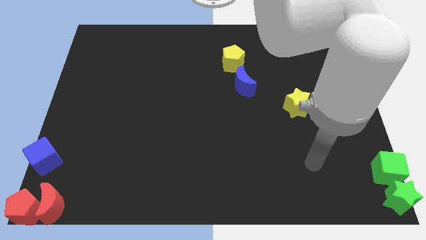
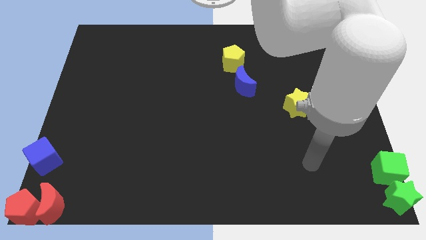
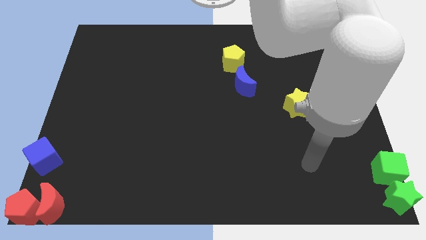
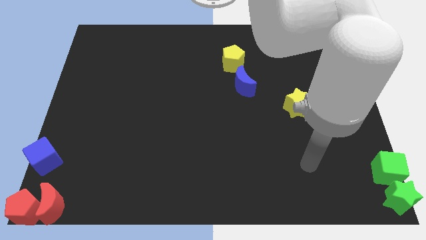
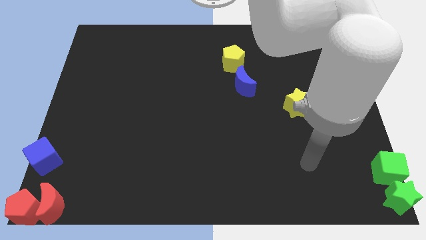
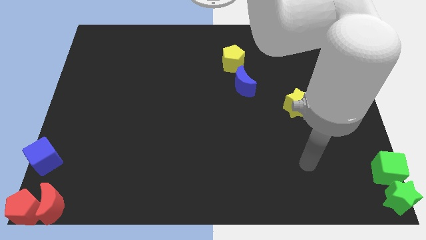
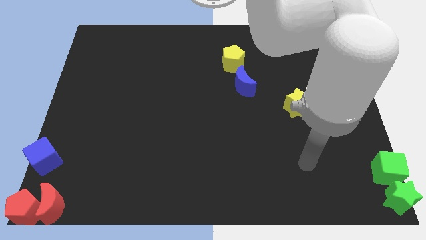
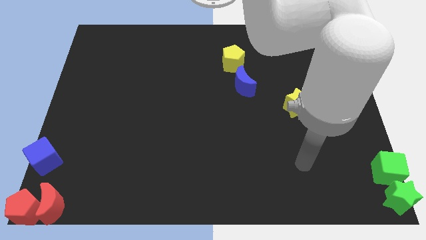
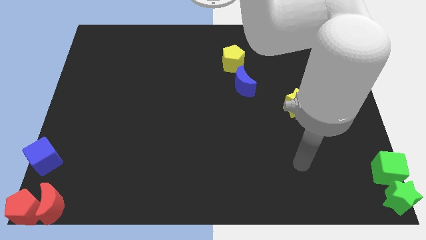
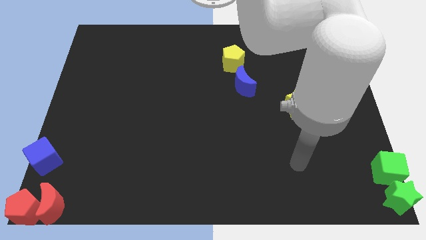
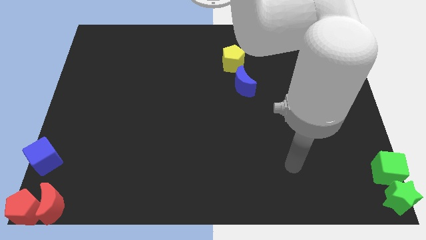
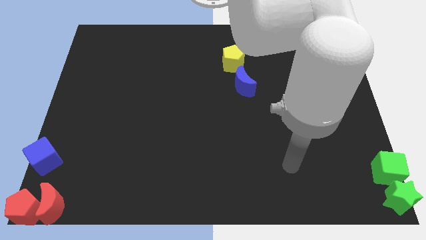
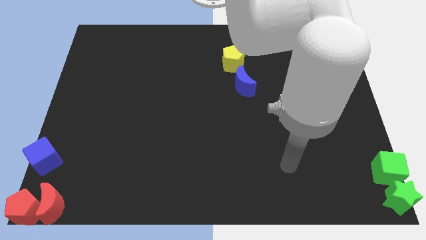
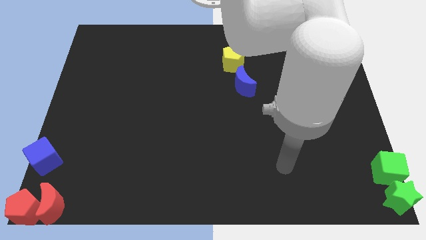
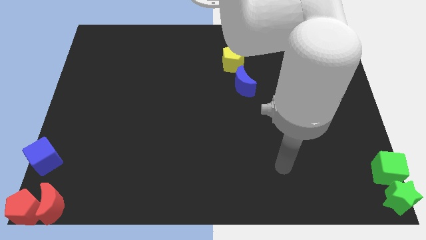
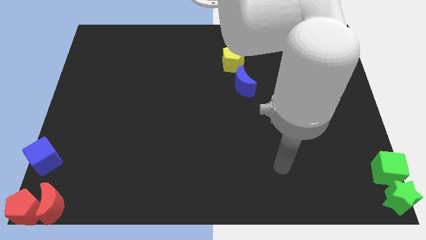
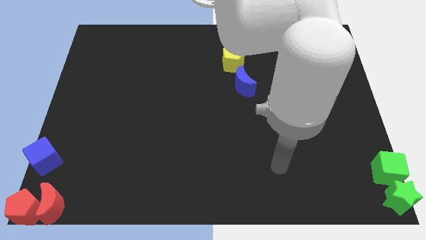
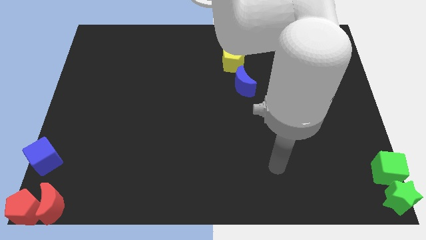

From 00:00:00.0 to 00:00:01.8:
move the arm towards the left side

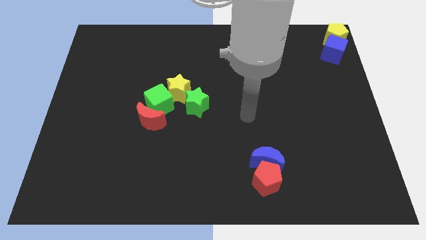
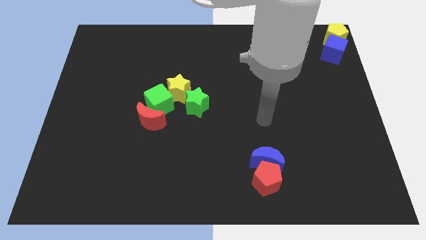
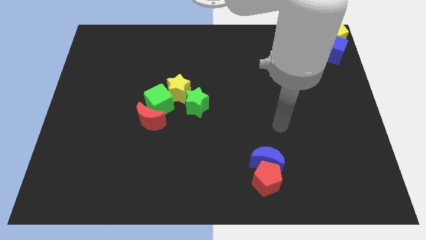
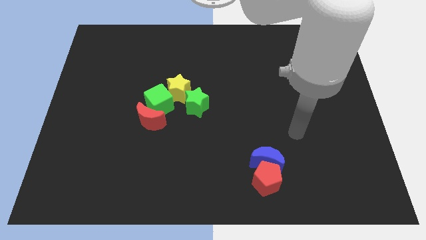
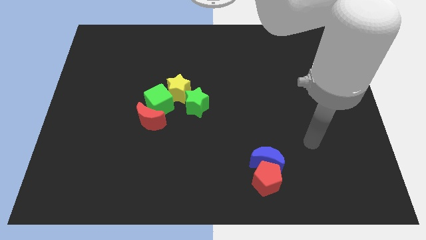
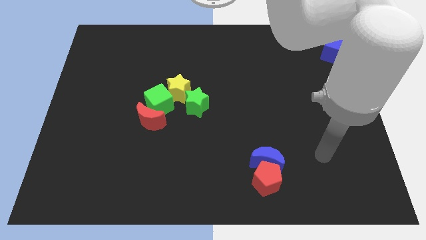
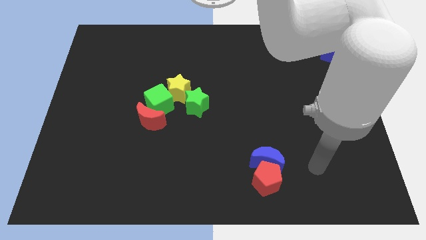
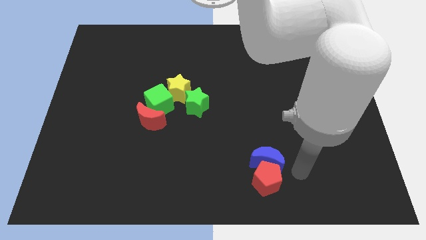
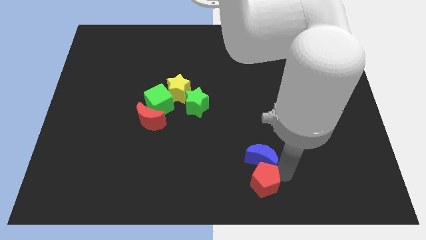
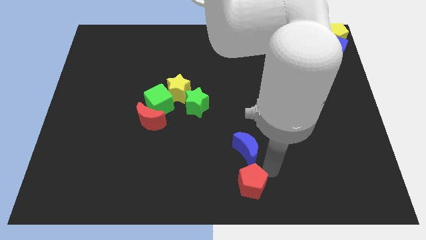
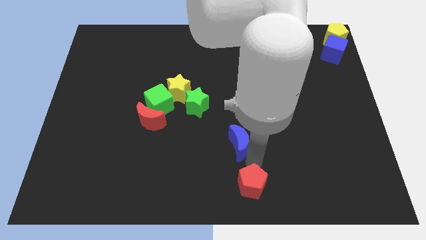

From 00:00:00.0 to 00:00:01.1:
move arm towards the blue crescent on the bottom right of the board

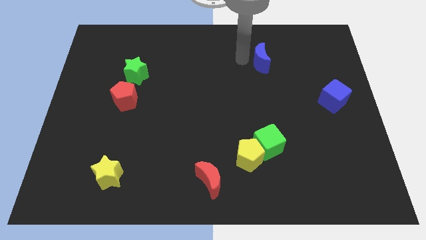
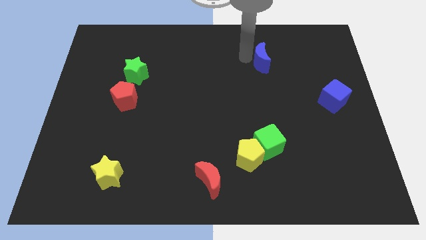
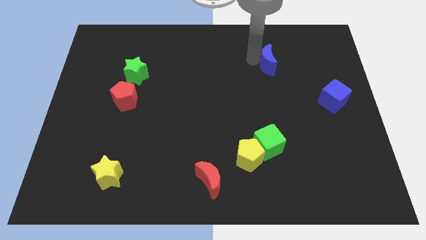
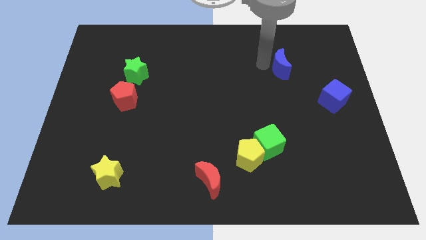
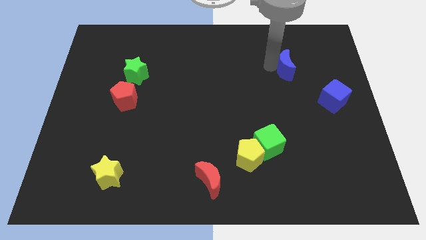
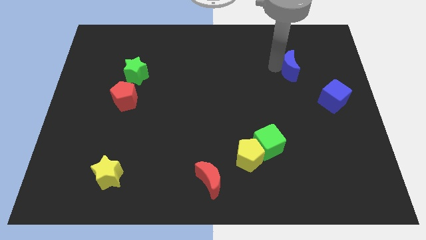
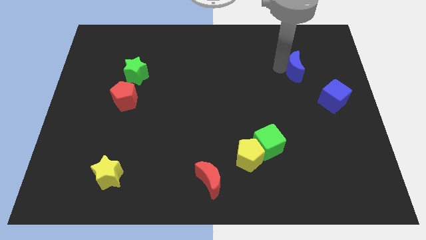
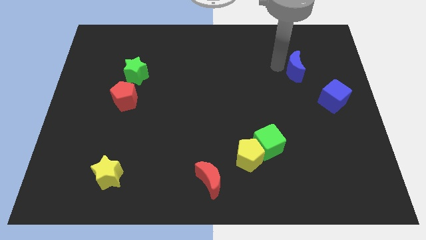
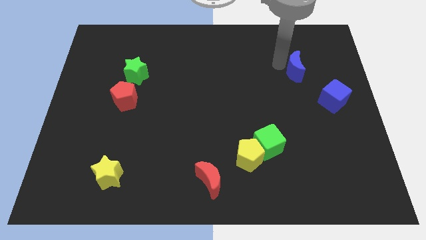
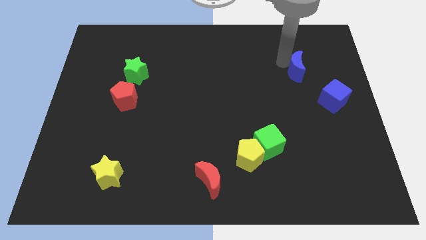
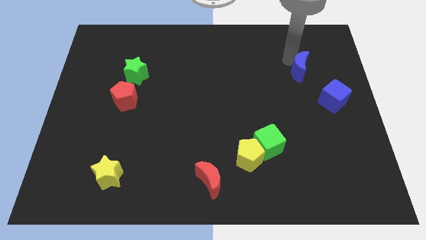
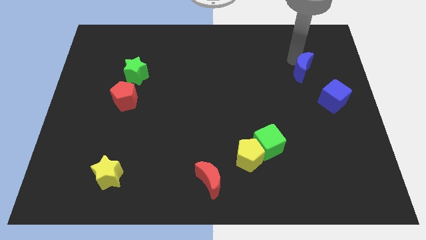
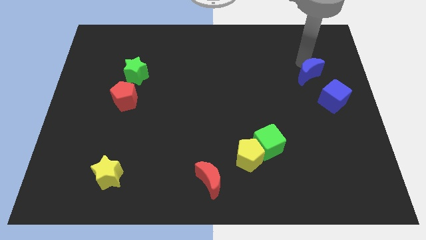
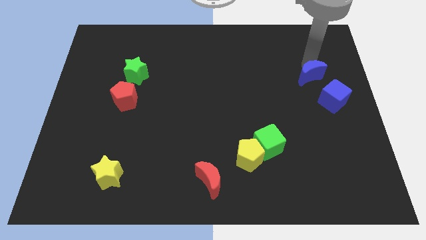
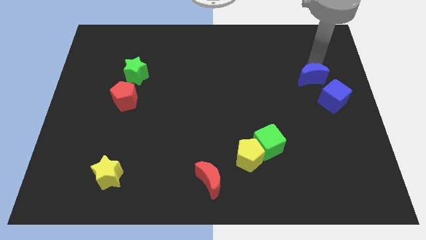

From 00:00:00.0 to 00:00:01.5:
move blue moon to the top of blue cube

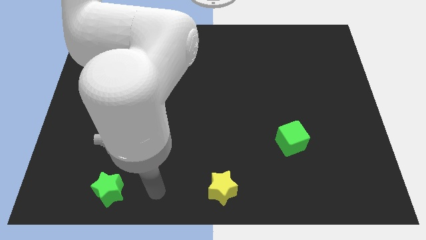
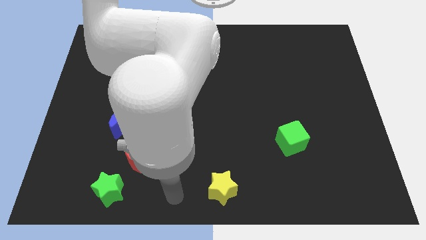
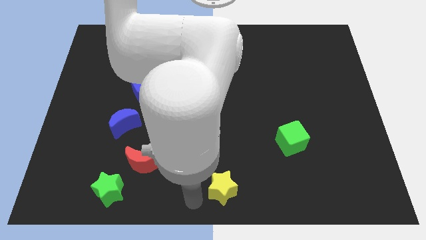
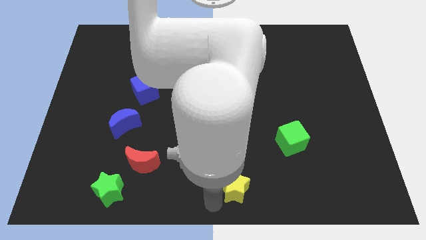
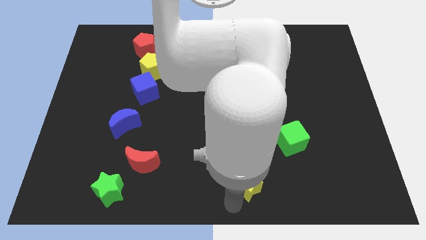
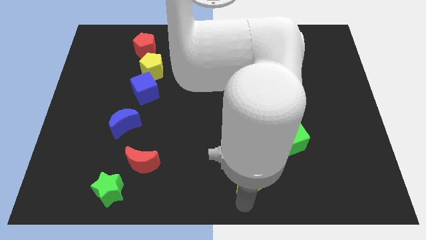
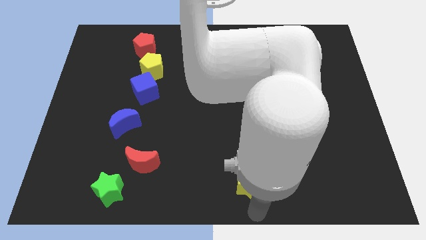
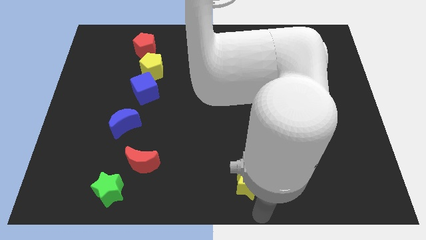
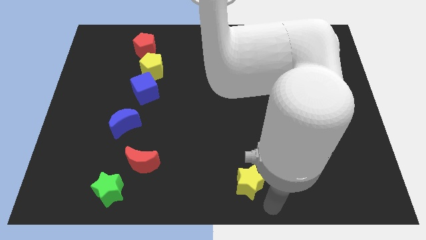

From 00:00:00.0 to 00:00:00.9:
push the yellow star towards the green cube

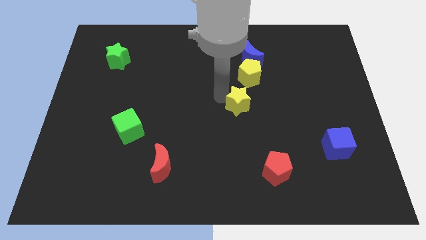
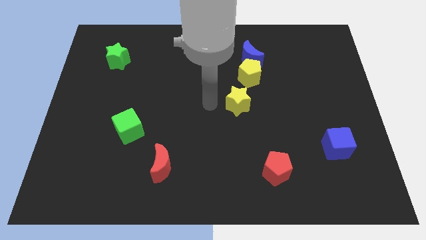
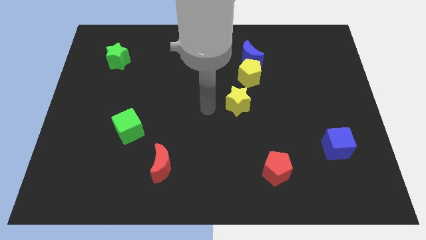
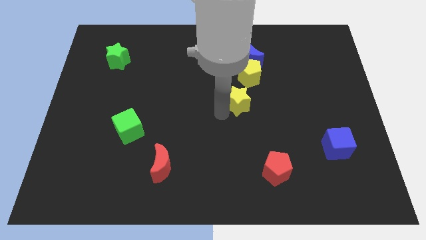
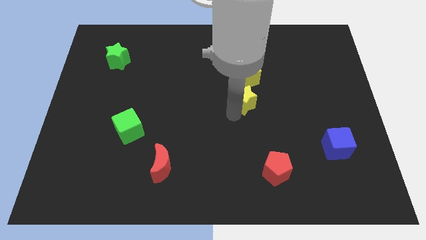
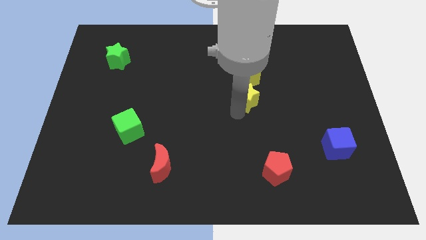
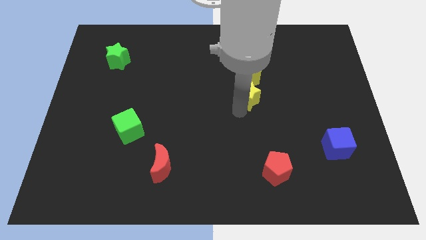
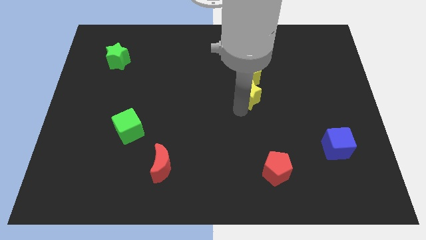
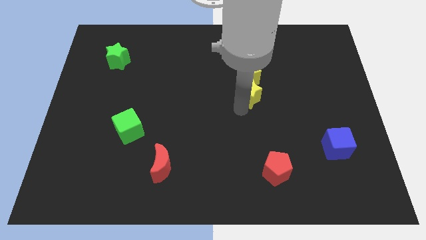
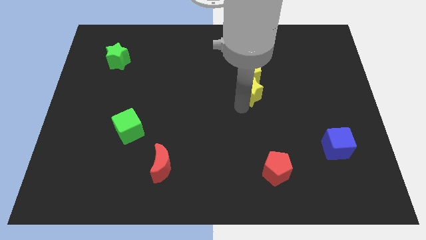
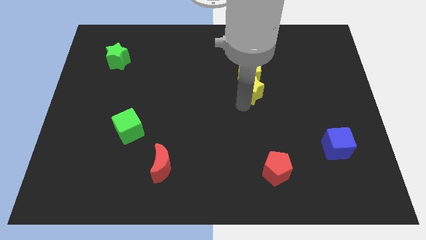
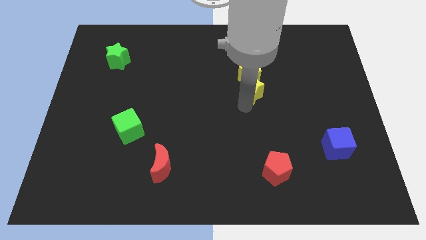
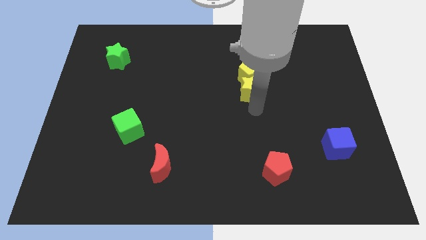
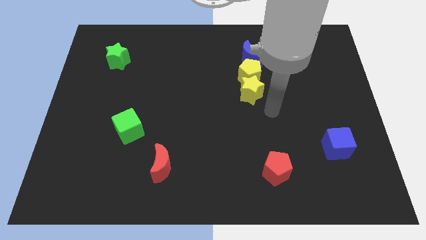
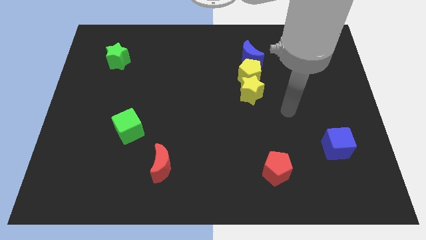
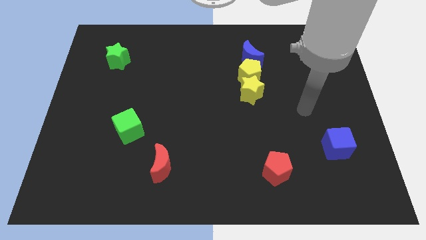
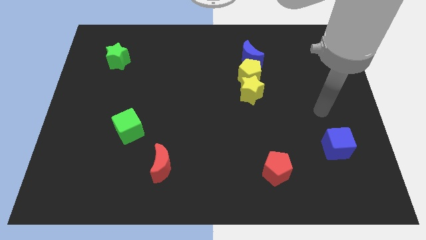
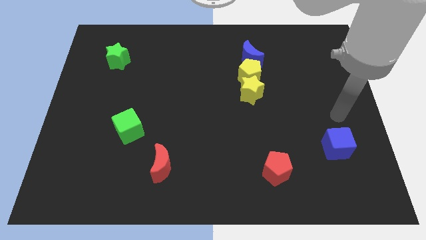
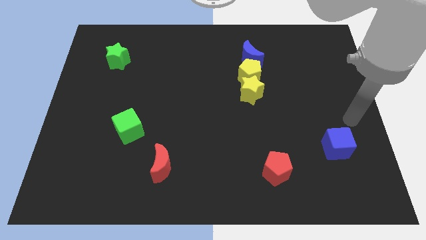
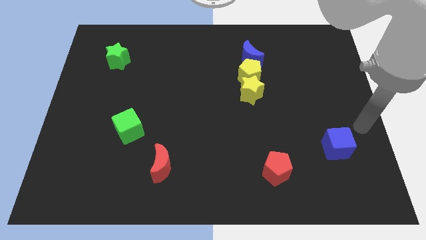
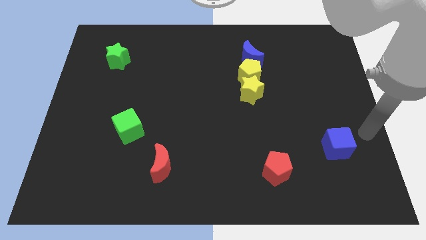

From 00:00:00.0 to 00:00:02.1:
slightly drag the yellow star towards the top

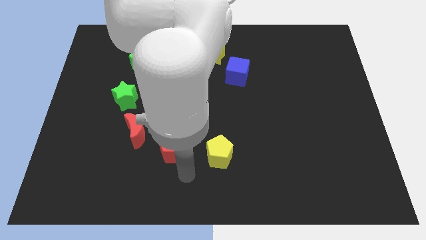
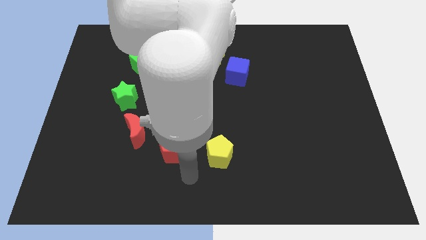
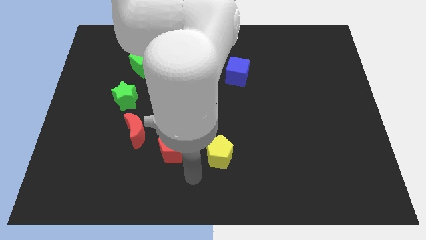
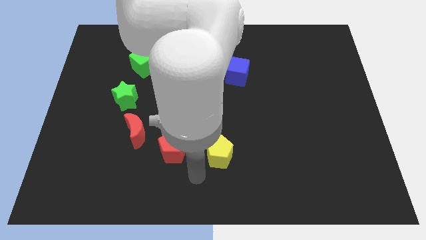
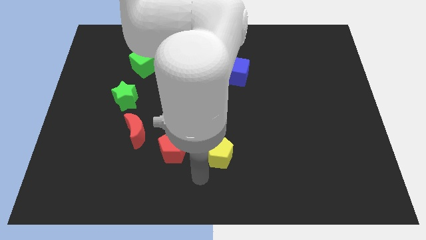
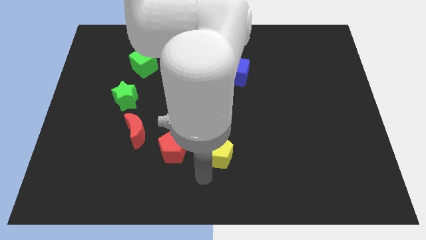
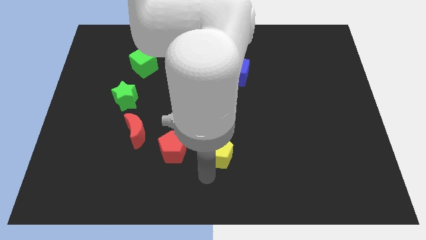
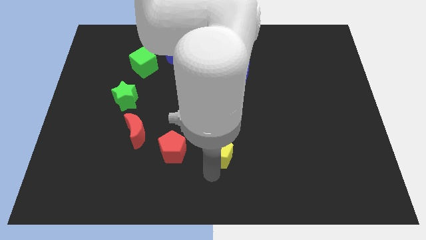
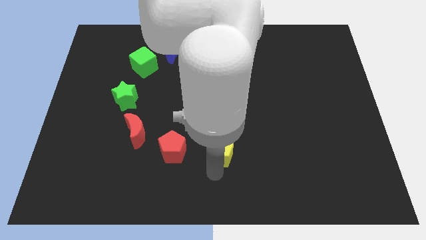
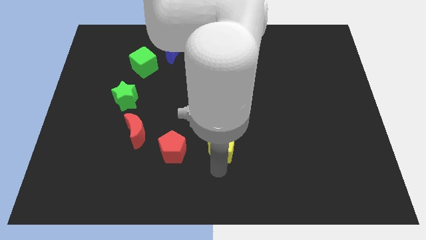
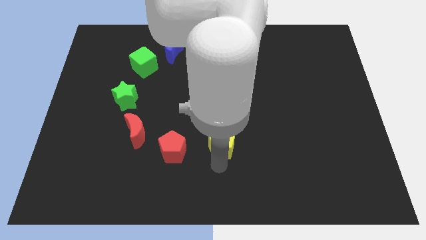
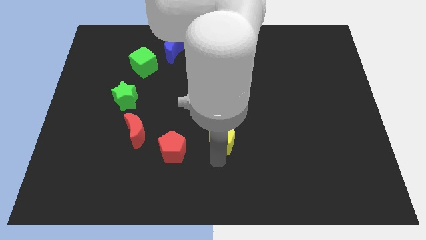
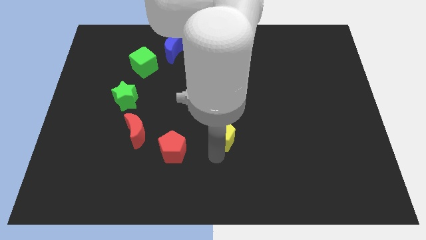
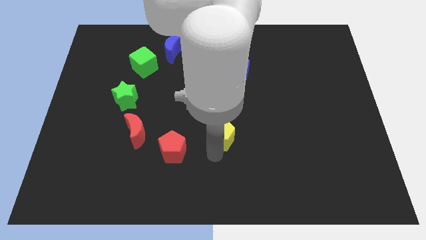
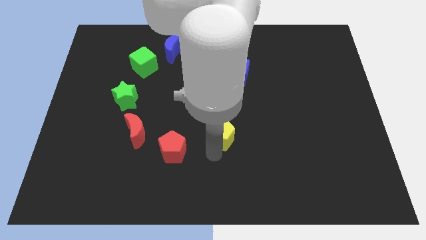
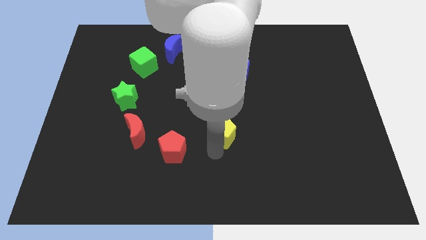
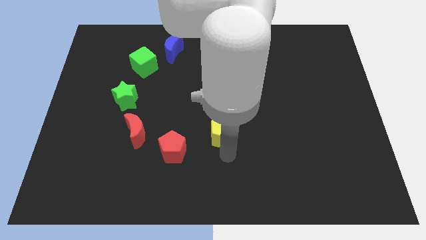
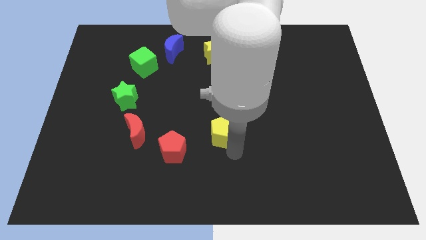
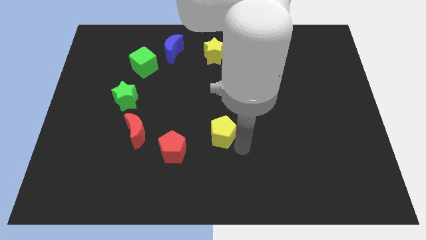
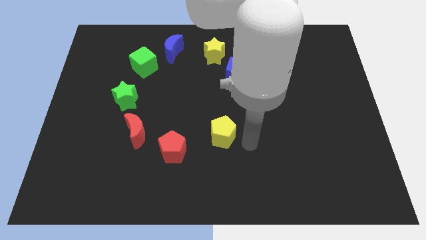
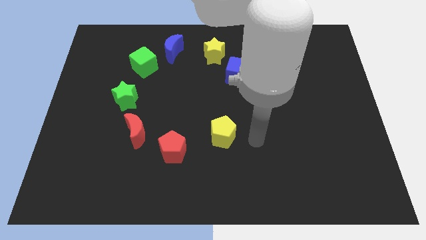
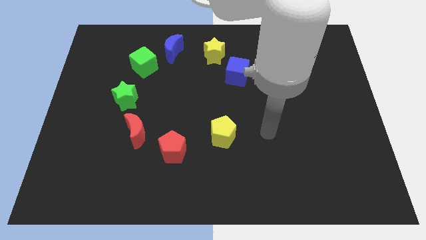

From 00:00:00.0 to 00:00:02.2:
push yellow pentagon towards center
